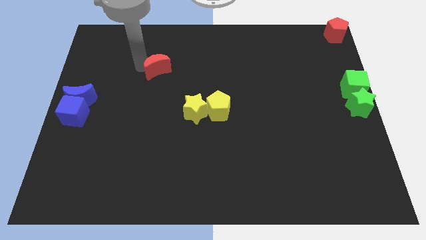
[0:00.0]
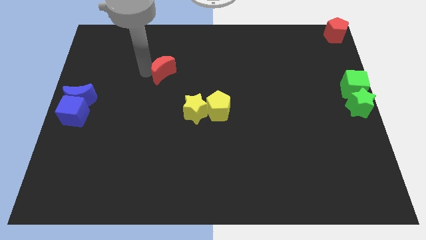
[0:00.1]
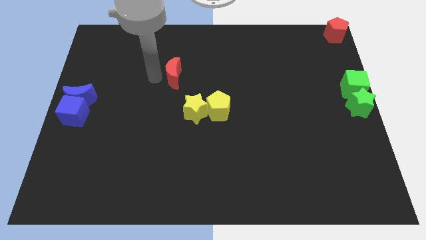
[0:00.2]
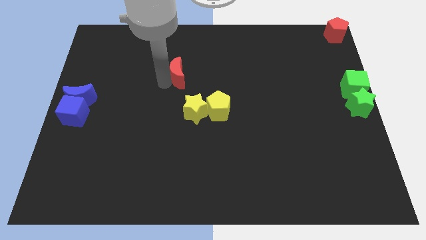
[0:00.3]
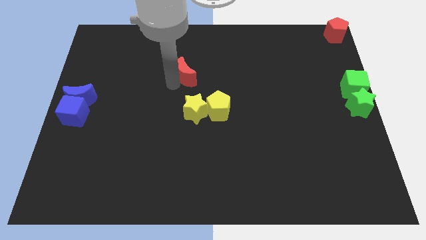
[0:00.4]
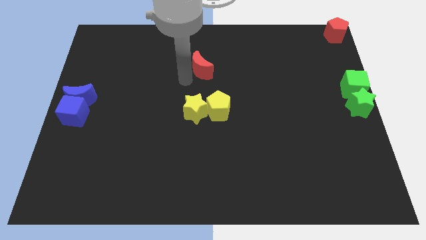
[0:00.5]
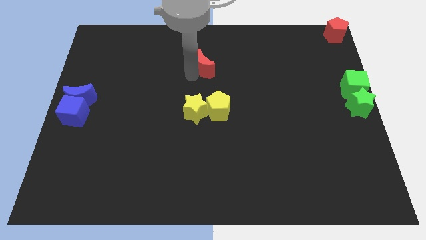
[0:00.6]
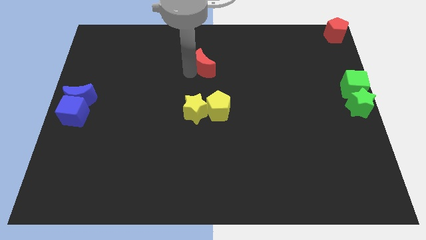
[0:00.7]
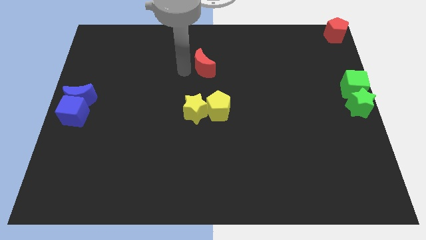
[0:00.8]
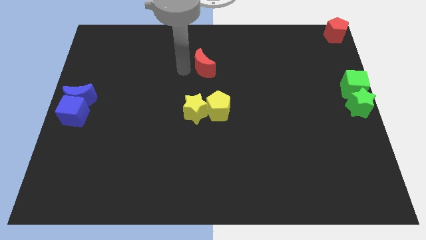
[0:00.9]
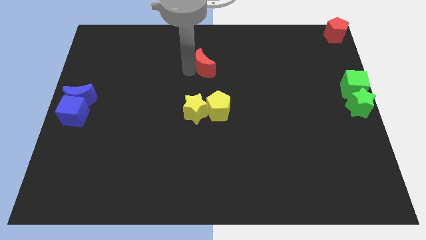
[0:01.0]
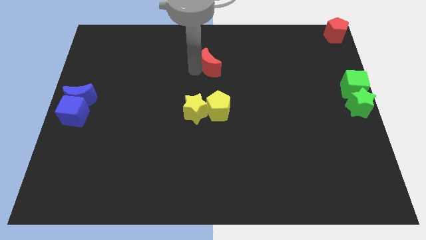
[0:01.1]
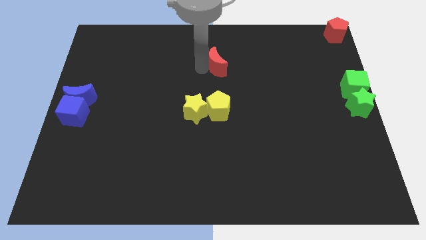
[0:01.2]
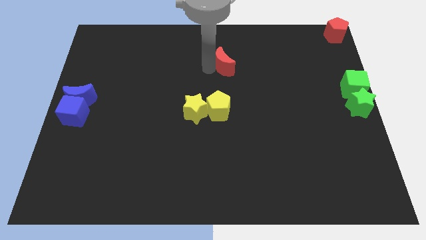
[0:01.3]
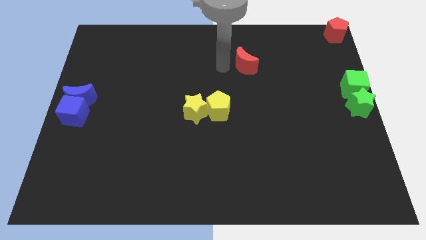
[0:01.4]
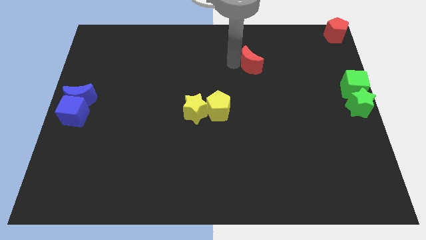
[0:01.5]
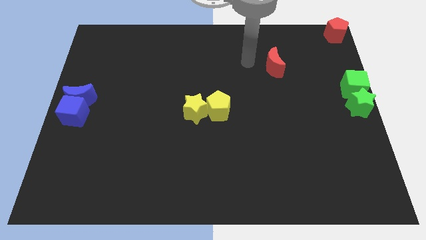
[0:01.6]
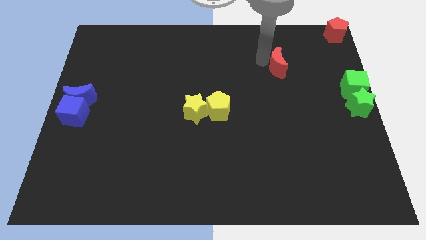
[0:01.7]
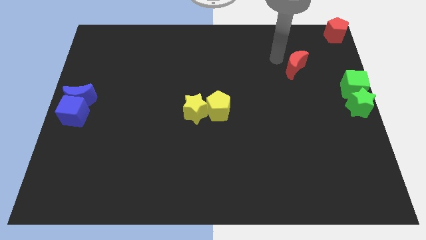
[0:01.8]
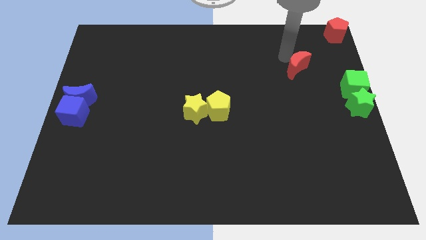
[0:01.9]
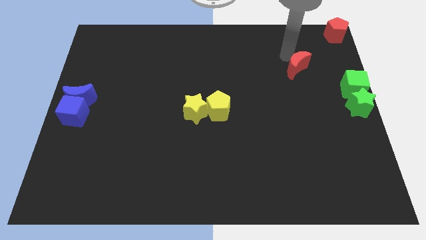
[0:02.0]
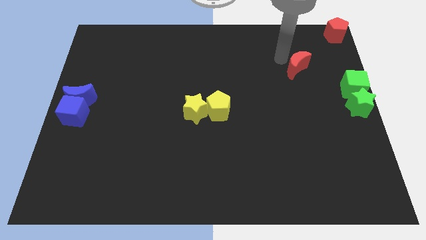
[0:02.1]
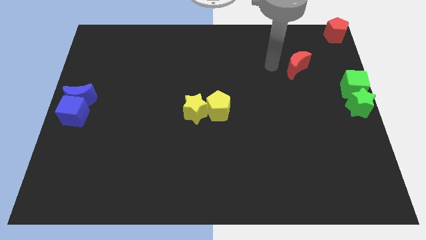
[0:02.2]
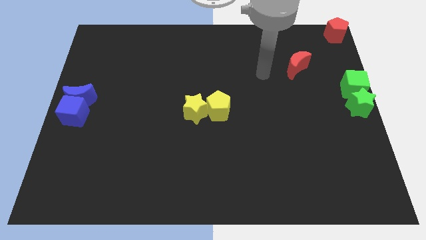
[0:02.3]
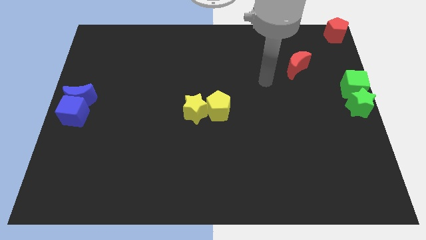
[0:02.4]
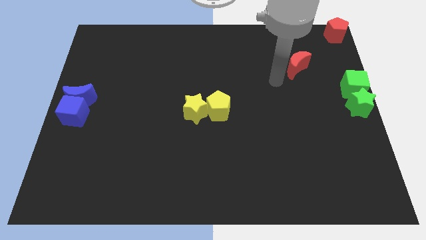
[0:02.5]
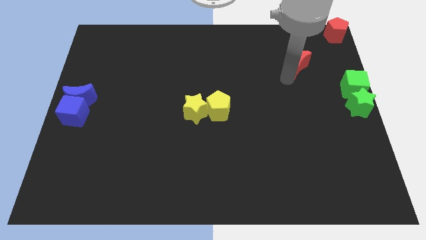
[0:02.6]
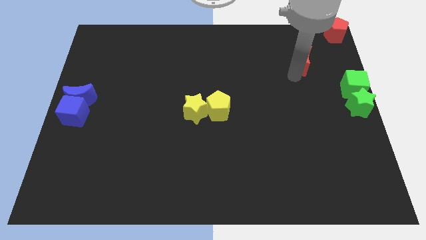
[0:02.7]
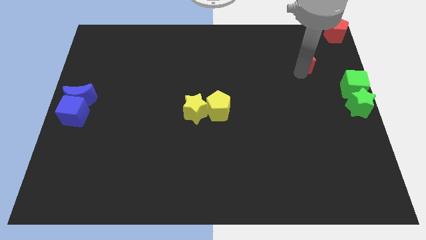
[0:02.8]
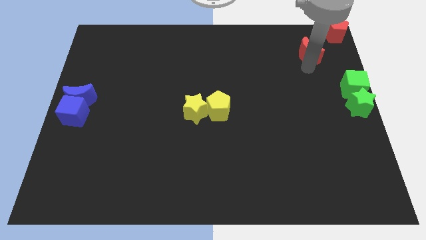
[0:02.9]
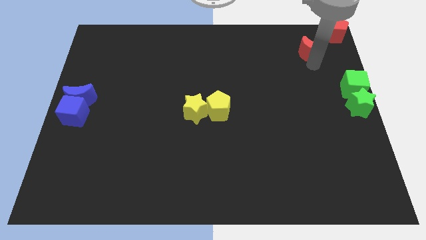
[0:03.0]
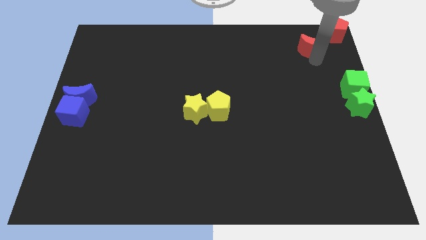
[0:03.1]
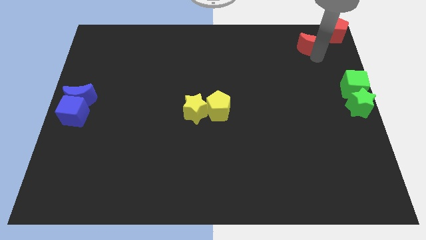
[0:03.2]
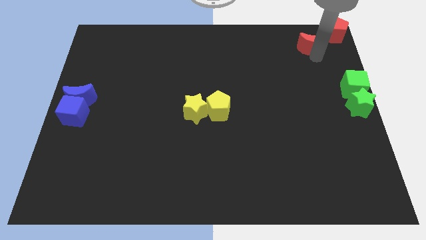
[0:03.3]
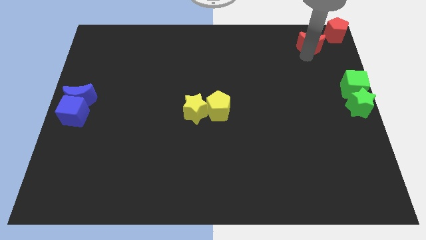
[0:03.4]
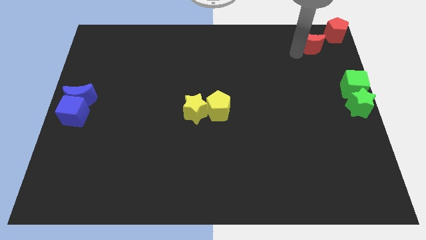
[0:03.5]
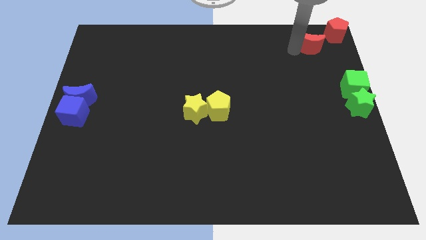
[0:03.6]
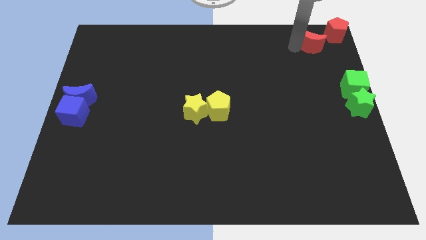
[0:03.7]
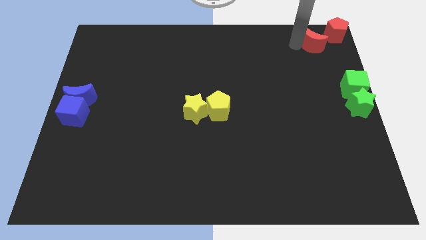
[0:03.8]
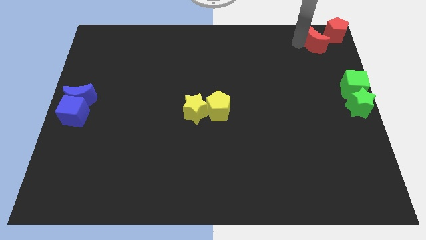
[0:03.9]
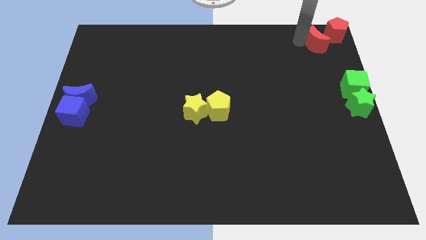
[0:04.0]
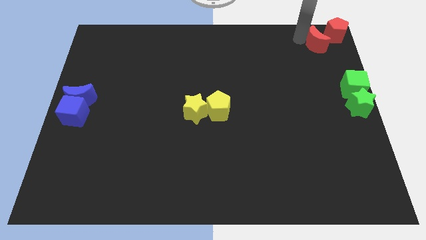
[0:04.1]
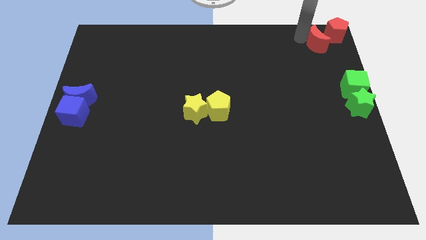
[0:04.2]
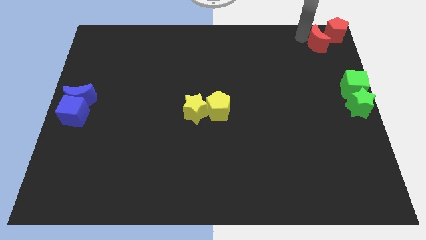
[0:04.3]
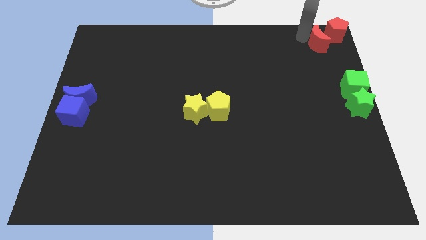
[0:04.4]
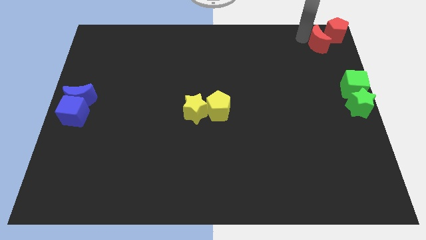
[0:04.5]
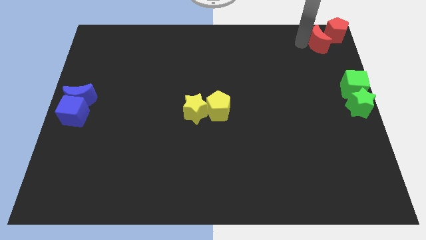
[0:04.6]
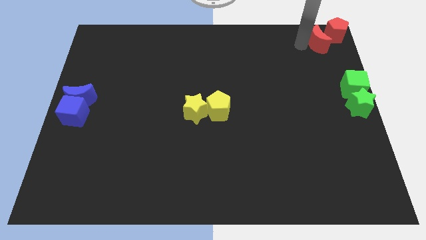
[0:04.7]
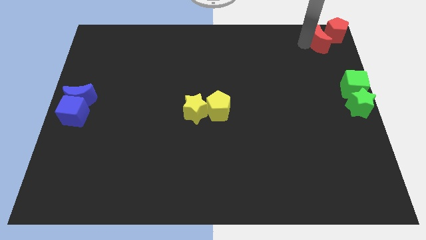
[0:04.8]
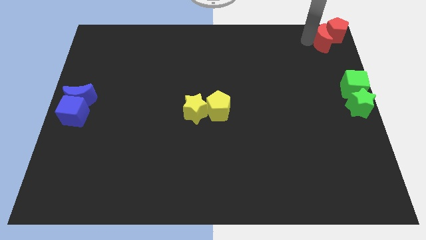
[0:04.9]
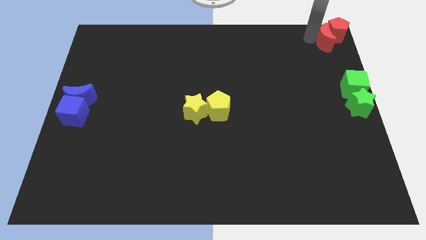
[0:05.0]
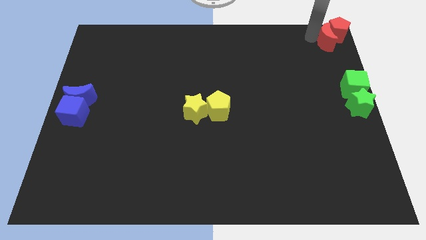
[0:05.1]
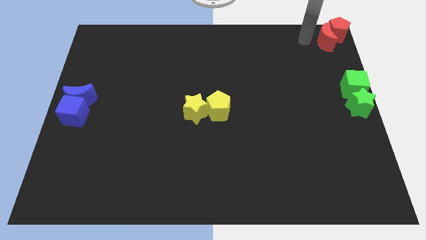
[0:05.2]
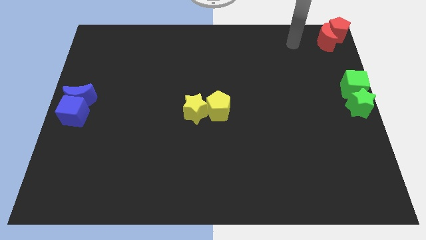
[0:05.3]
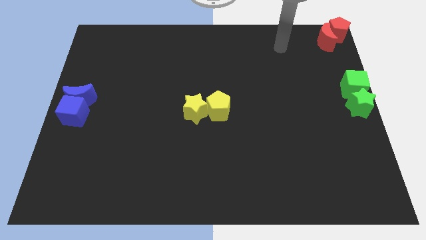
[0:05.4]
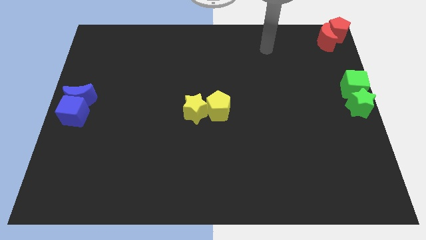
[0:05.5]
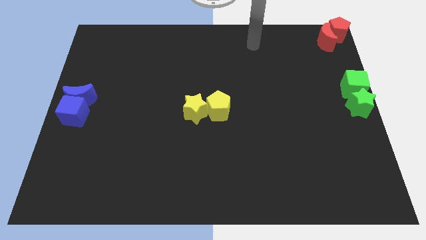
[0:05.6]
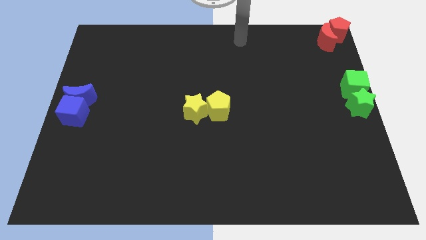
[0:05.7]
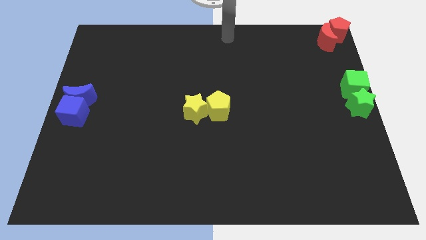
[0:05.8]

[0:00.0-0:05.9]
push the red crescent into the red pentagon

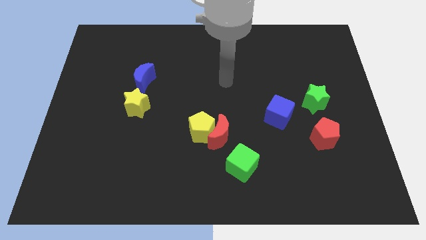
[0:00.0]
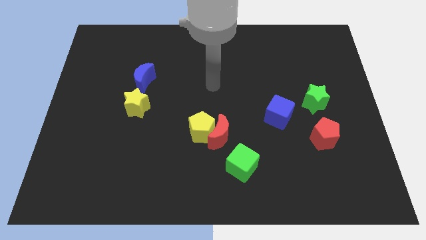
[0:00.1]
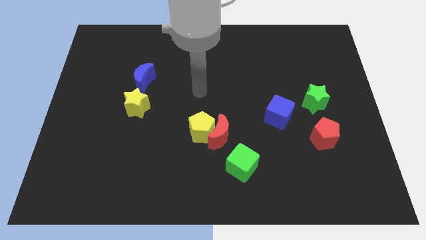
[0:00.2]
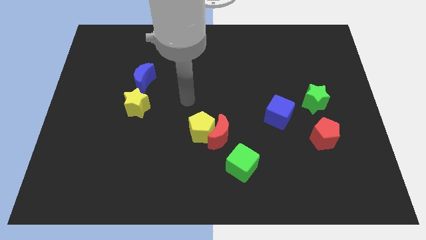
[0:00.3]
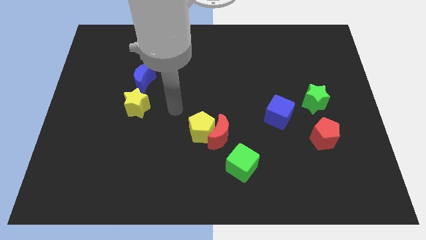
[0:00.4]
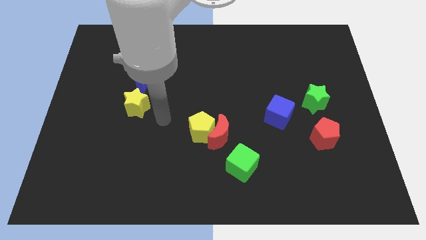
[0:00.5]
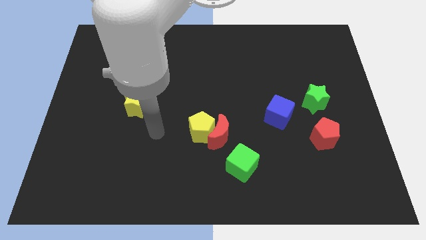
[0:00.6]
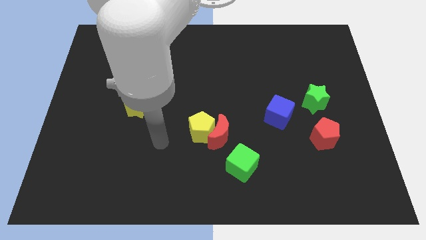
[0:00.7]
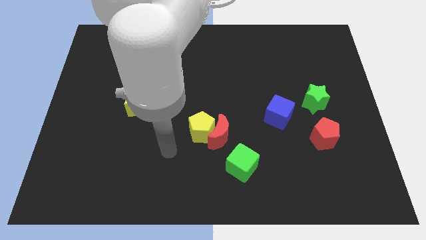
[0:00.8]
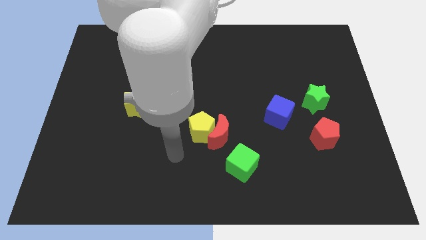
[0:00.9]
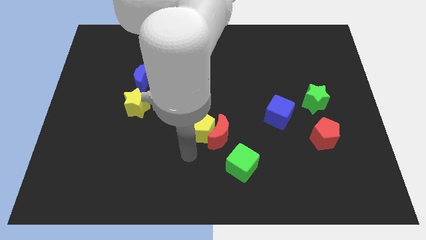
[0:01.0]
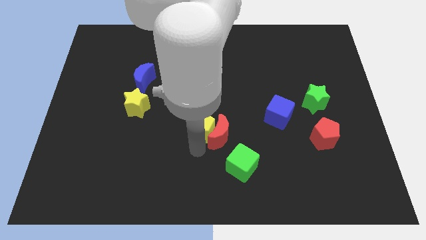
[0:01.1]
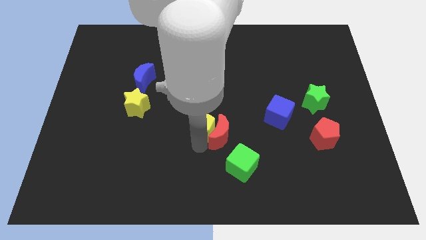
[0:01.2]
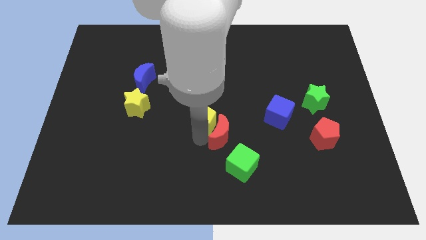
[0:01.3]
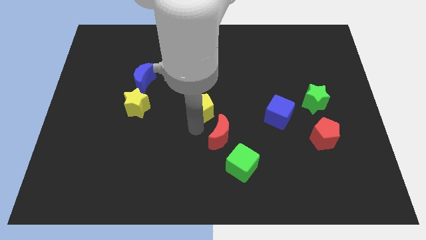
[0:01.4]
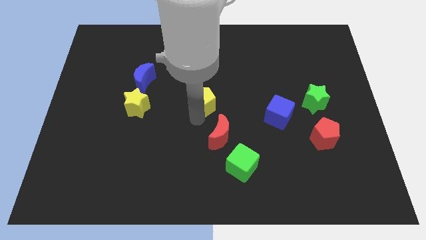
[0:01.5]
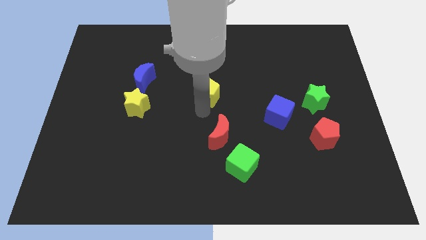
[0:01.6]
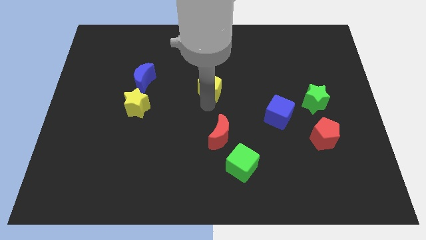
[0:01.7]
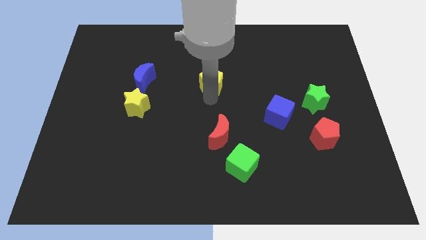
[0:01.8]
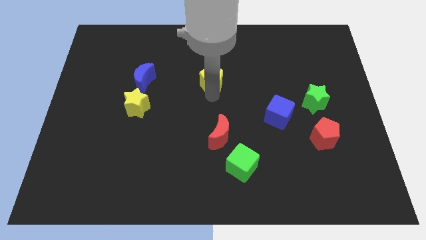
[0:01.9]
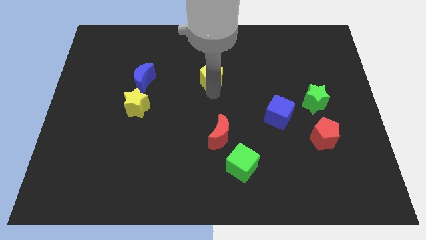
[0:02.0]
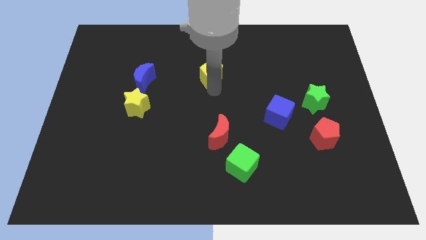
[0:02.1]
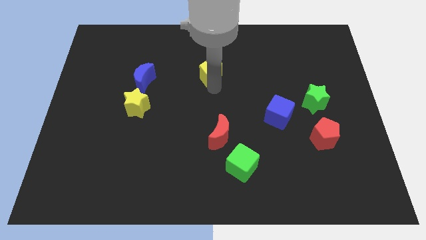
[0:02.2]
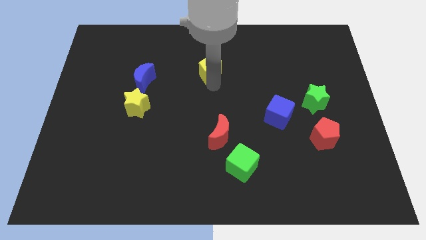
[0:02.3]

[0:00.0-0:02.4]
move the yellow pentagon horizontally right to the blue moon

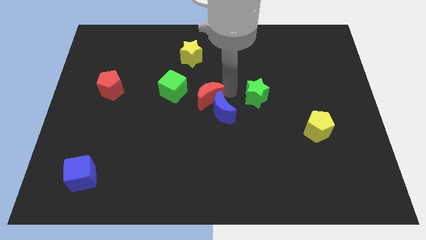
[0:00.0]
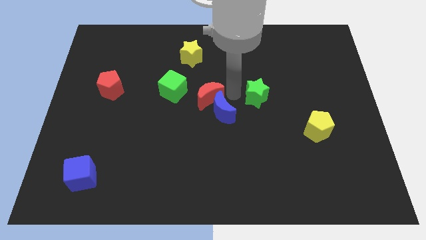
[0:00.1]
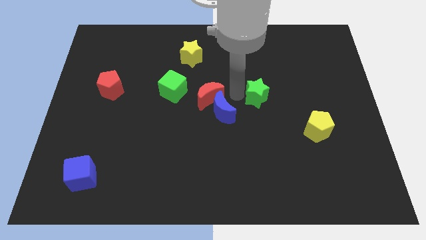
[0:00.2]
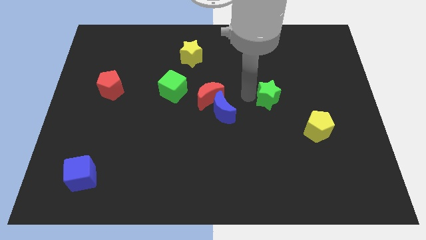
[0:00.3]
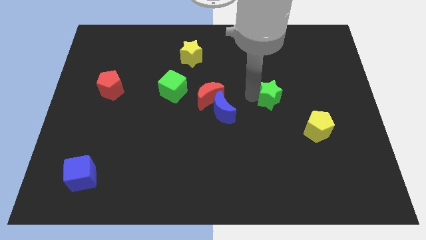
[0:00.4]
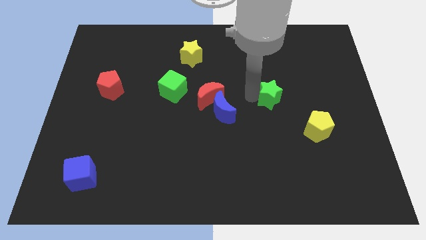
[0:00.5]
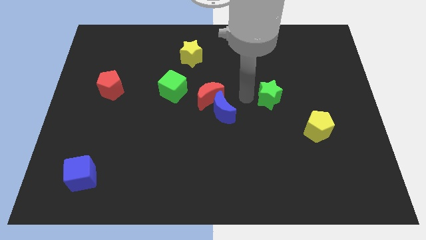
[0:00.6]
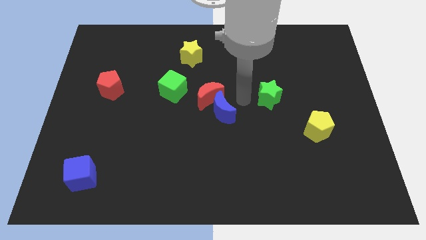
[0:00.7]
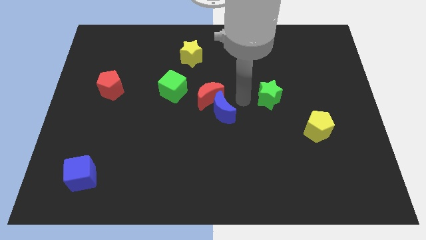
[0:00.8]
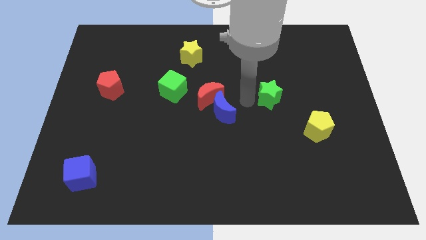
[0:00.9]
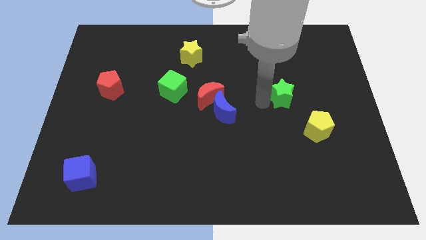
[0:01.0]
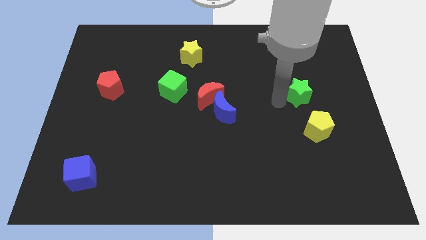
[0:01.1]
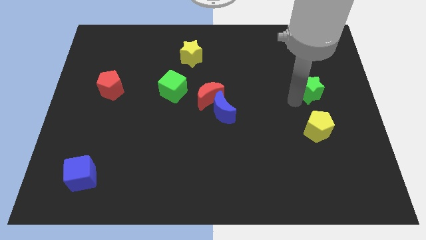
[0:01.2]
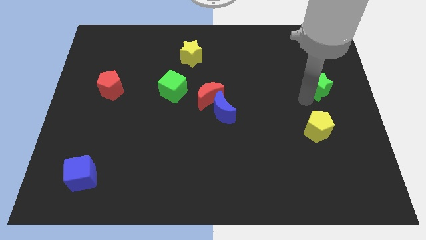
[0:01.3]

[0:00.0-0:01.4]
move the green star to the top side of the yellow pentagon
